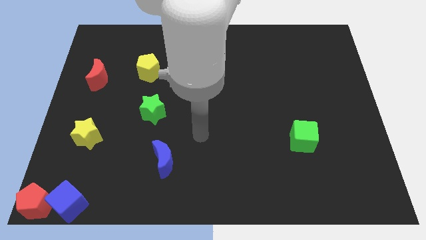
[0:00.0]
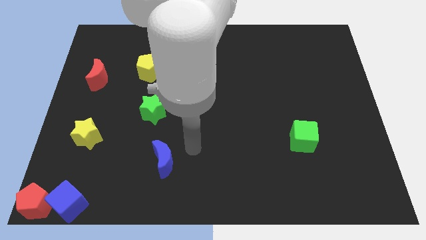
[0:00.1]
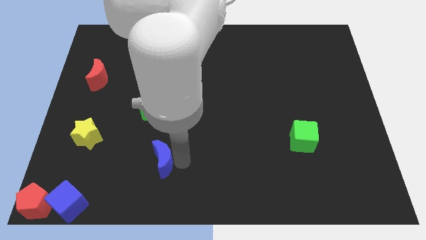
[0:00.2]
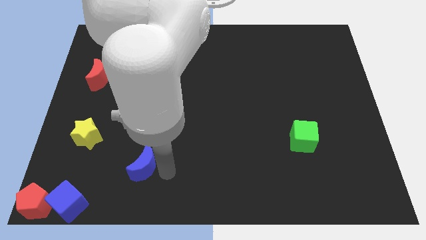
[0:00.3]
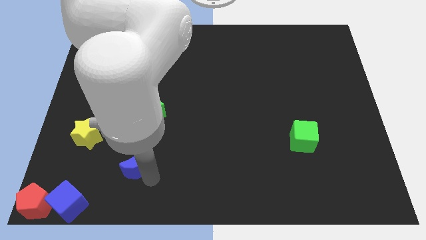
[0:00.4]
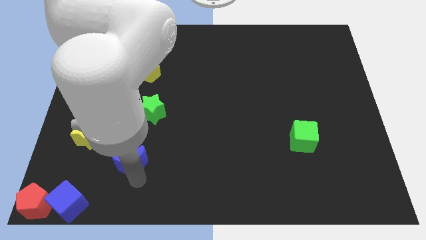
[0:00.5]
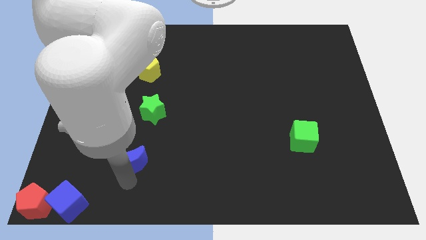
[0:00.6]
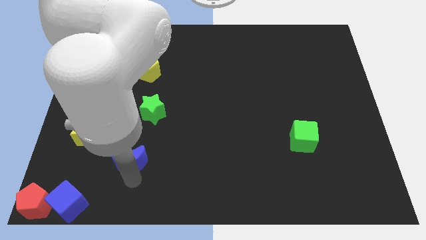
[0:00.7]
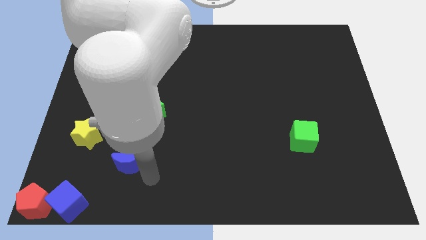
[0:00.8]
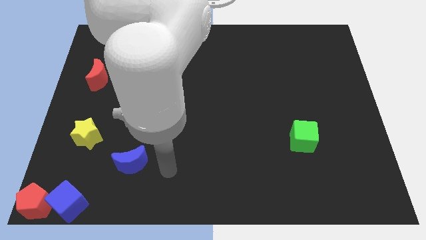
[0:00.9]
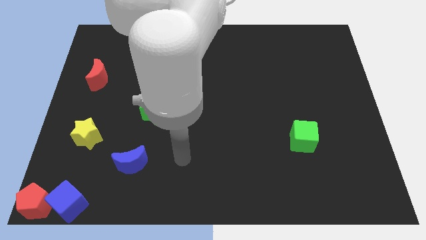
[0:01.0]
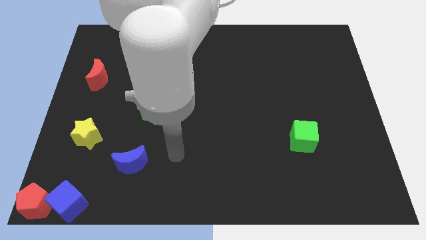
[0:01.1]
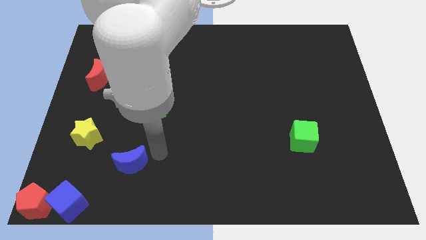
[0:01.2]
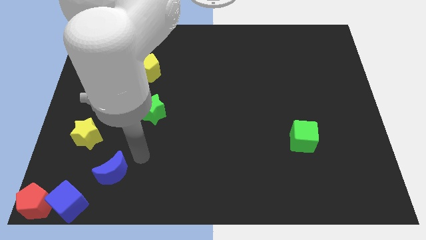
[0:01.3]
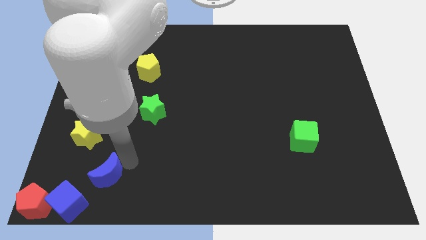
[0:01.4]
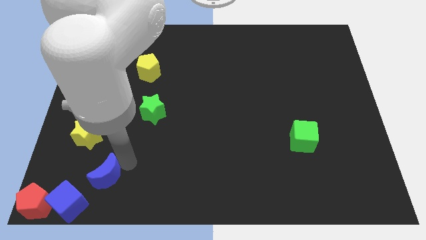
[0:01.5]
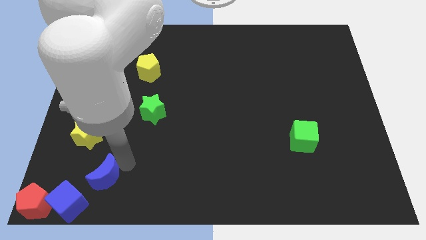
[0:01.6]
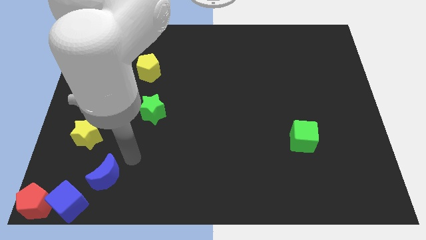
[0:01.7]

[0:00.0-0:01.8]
place the blue moon above the blue cube

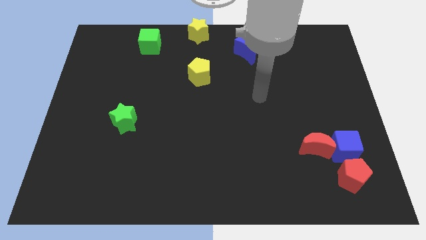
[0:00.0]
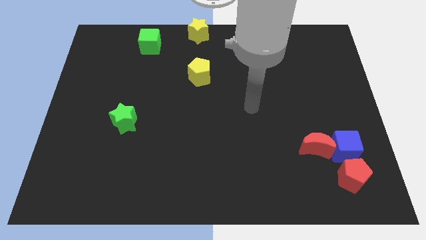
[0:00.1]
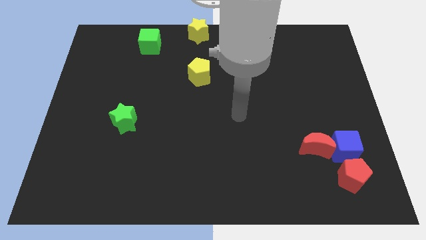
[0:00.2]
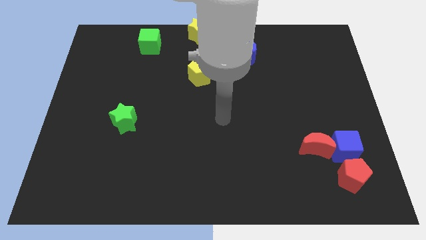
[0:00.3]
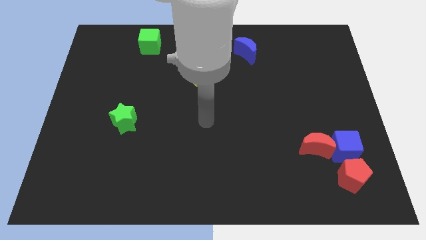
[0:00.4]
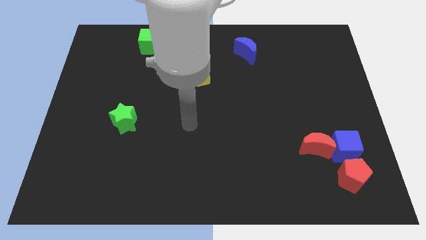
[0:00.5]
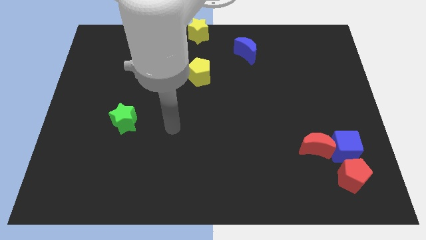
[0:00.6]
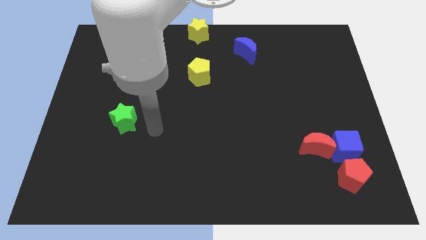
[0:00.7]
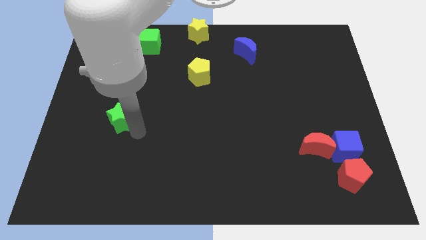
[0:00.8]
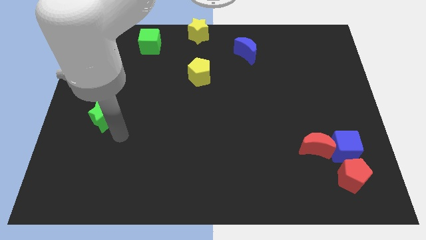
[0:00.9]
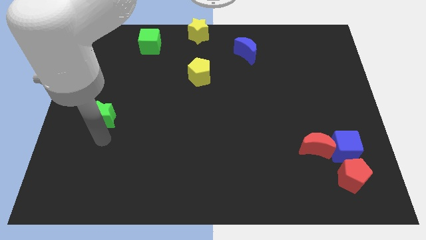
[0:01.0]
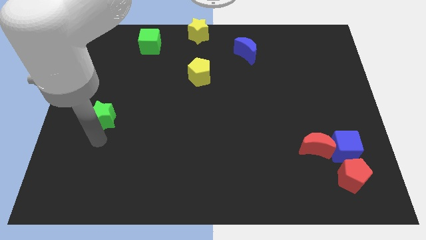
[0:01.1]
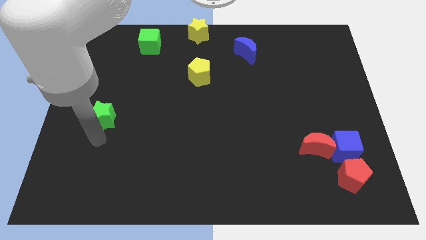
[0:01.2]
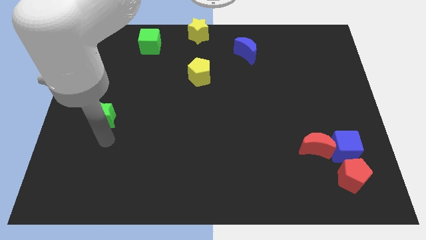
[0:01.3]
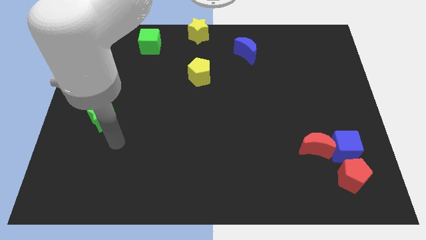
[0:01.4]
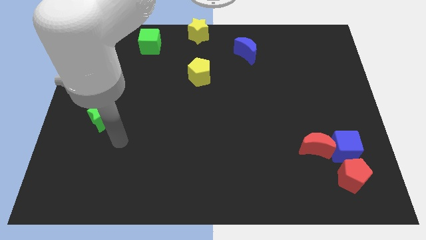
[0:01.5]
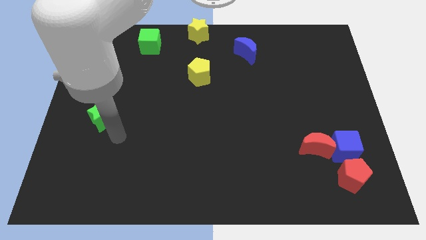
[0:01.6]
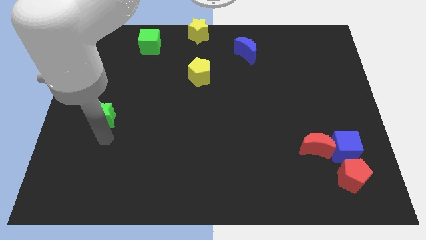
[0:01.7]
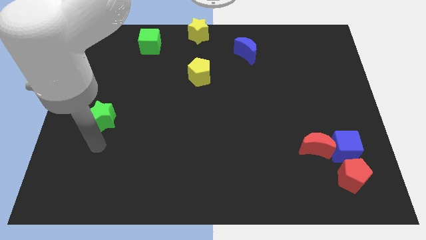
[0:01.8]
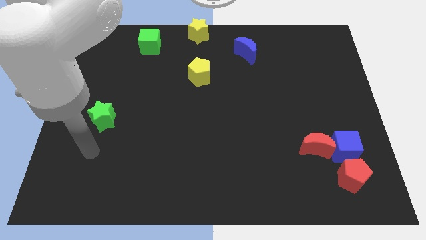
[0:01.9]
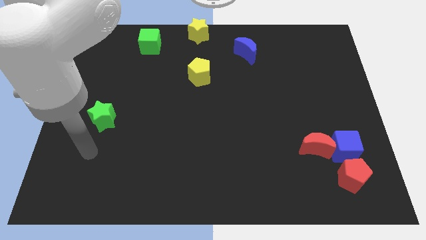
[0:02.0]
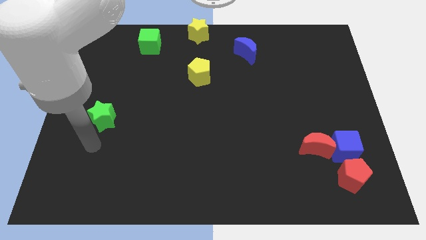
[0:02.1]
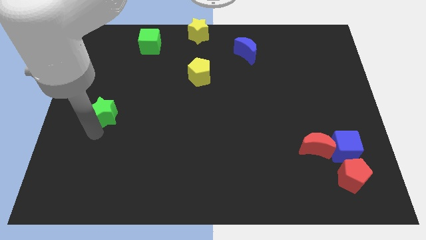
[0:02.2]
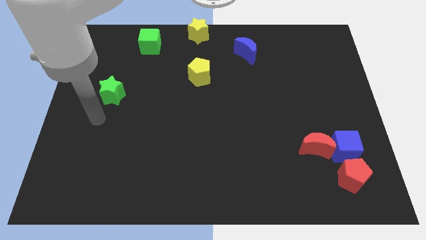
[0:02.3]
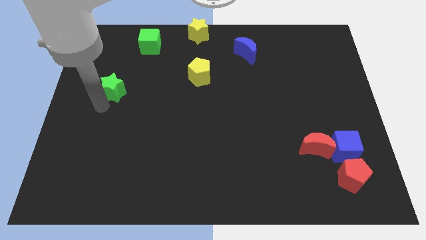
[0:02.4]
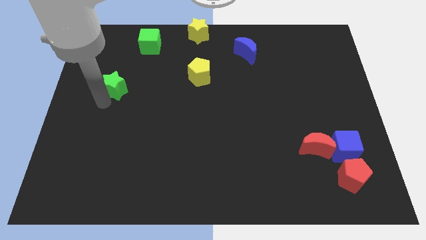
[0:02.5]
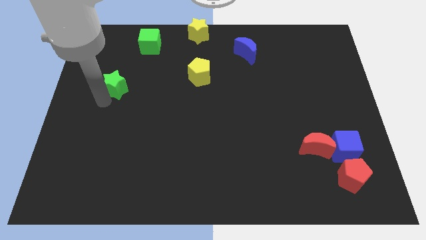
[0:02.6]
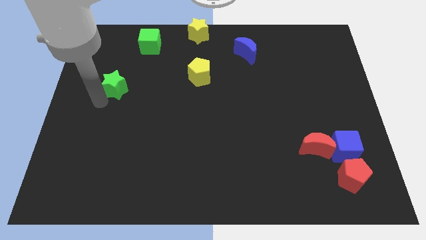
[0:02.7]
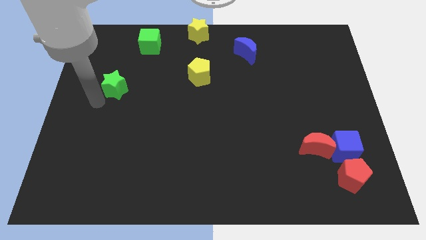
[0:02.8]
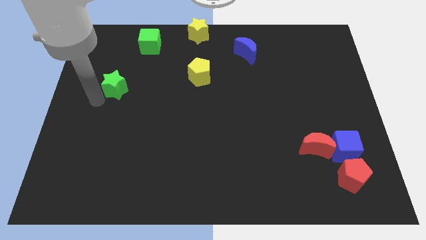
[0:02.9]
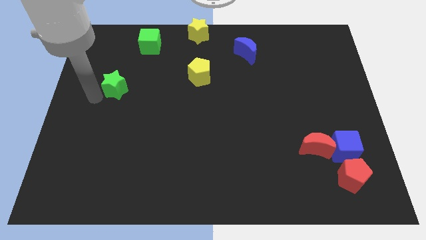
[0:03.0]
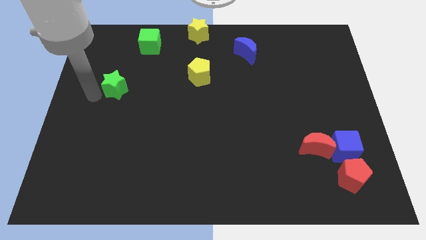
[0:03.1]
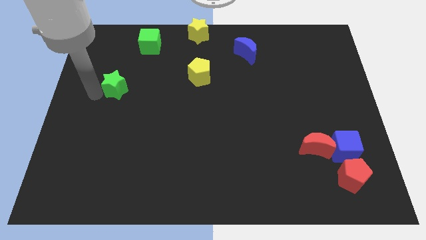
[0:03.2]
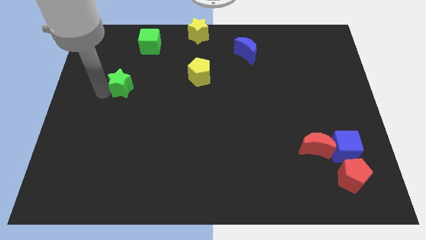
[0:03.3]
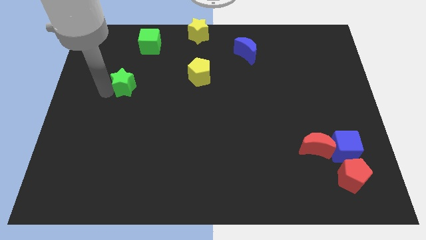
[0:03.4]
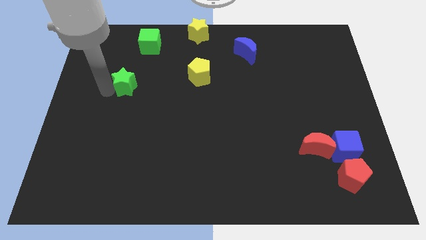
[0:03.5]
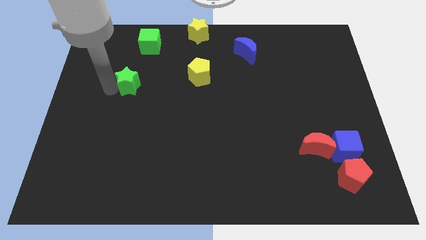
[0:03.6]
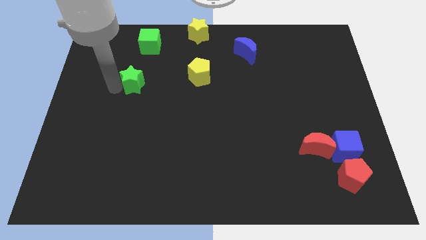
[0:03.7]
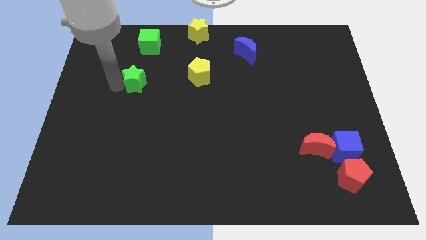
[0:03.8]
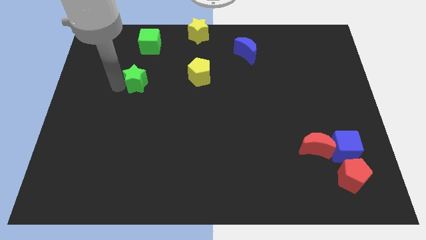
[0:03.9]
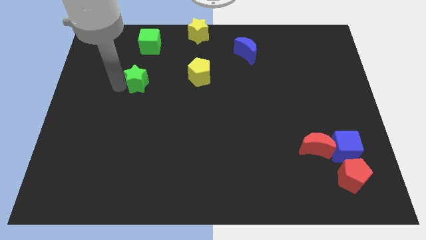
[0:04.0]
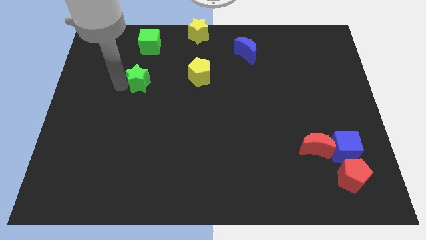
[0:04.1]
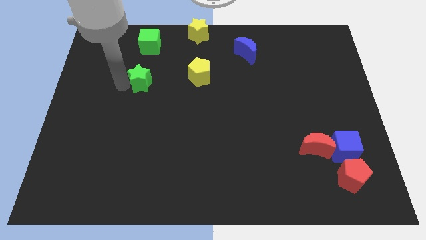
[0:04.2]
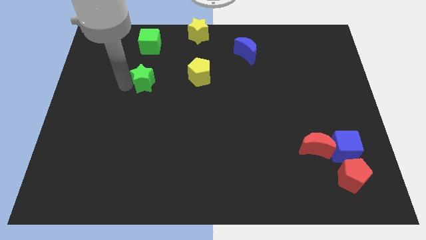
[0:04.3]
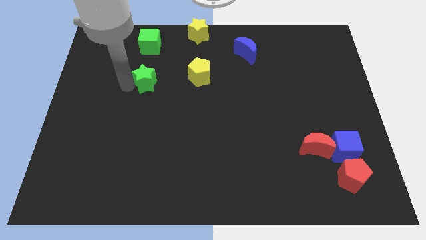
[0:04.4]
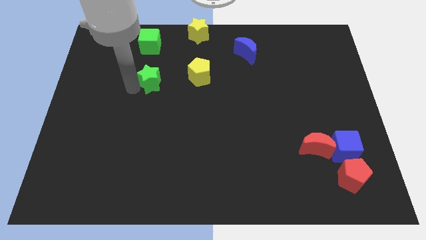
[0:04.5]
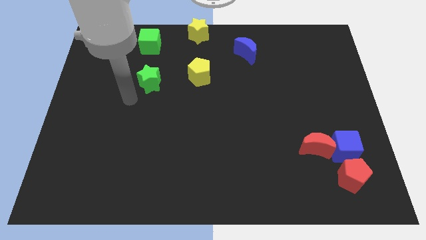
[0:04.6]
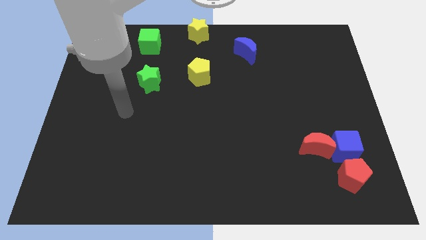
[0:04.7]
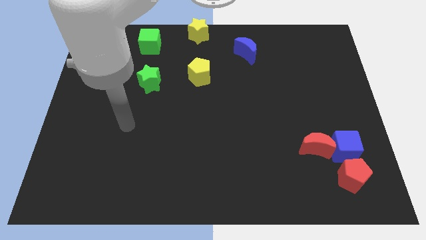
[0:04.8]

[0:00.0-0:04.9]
move the green star vertical to the green cube

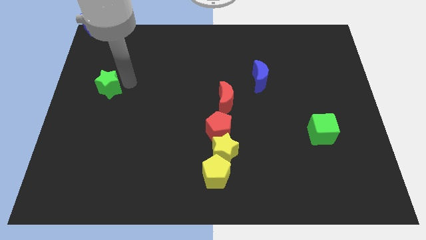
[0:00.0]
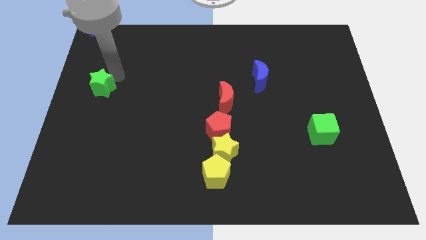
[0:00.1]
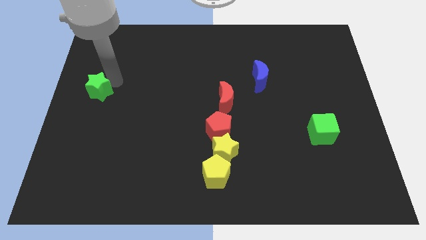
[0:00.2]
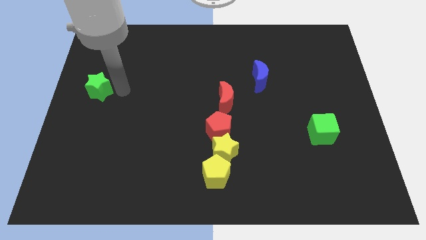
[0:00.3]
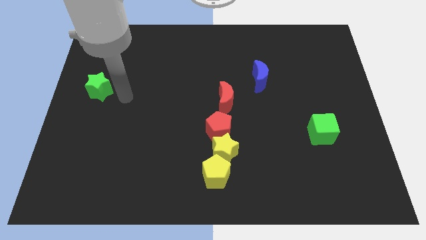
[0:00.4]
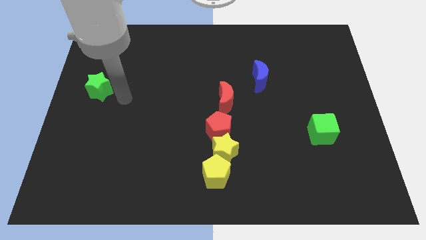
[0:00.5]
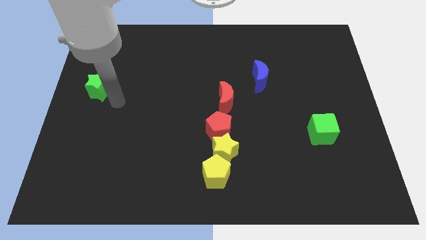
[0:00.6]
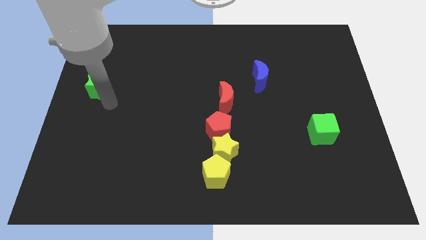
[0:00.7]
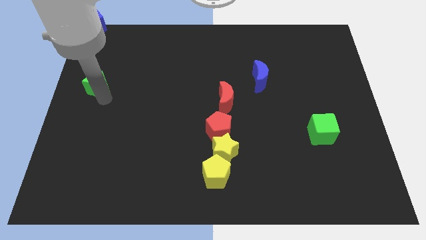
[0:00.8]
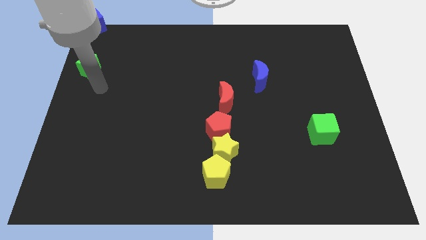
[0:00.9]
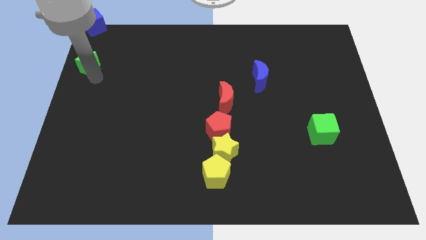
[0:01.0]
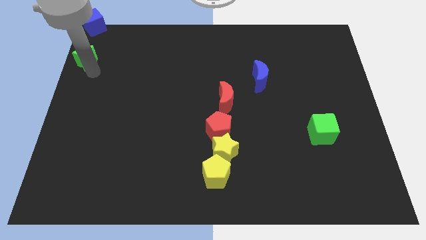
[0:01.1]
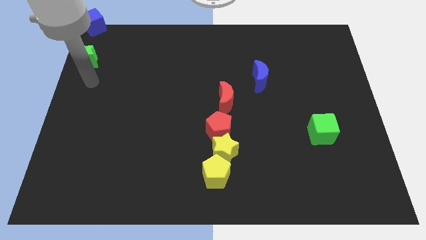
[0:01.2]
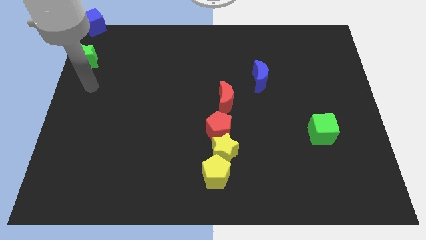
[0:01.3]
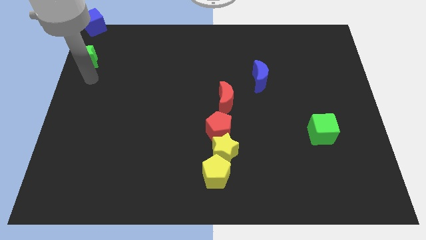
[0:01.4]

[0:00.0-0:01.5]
move green star towards blue cube

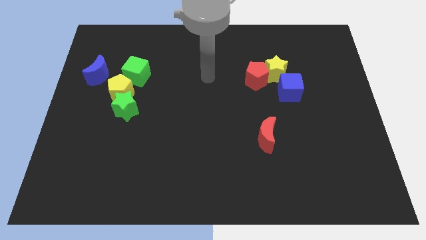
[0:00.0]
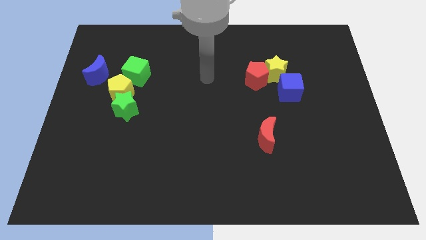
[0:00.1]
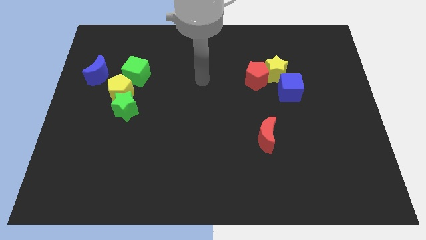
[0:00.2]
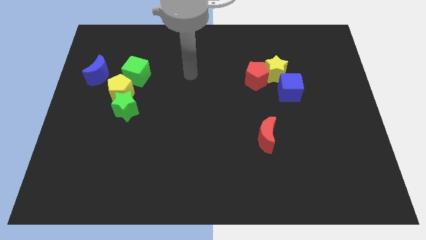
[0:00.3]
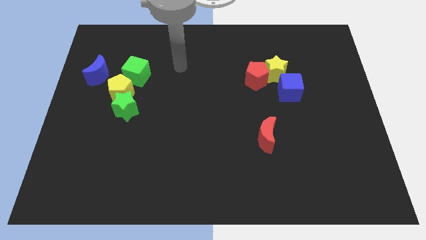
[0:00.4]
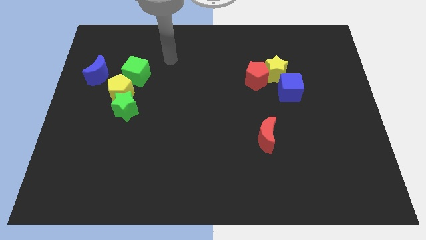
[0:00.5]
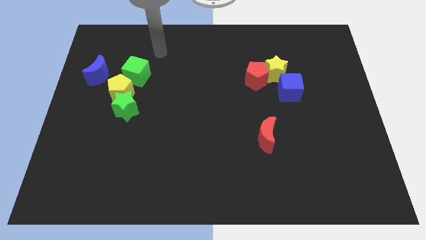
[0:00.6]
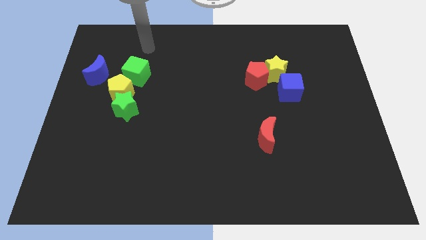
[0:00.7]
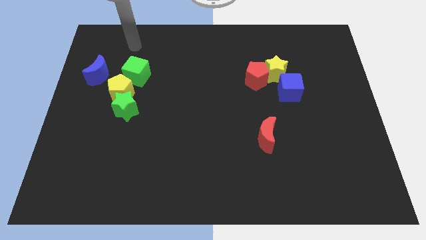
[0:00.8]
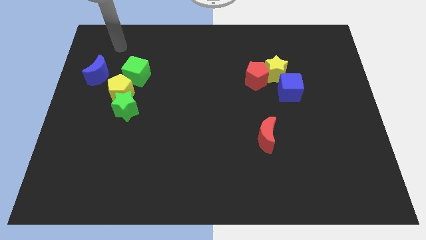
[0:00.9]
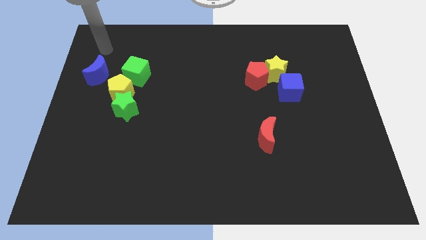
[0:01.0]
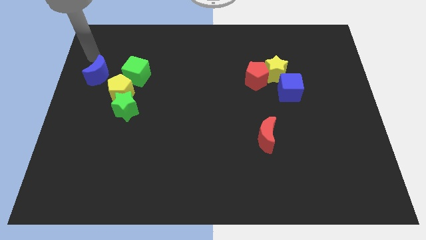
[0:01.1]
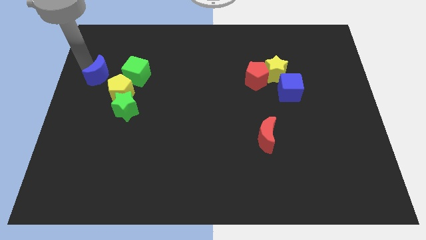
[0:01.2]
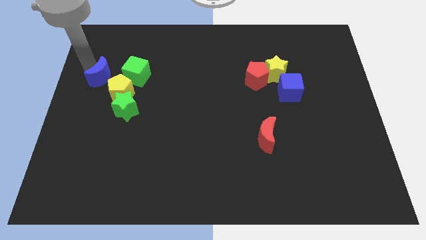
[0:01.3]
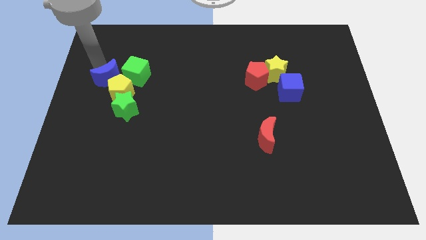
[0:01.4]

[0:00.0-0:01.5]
push the blue moon into the yellow pentagon
